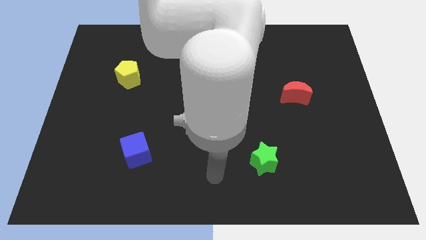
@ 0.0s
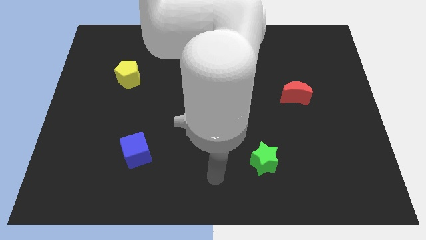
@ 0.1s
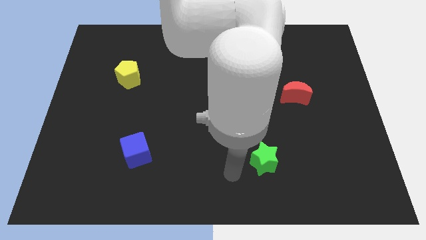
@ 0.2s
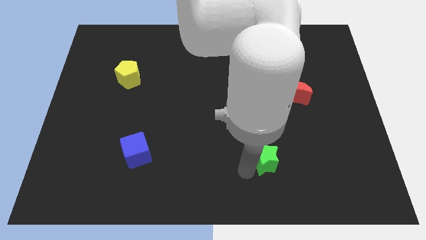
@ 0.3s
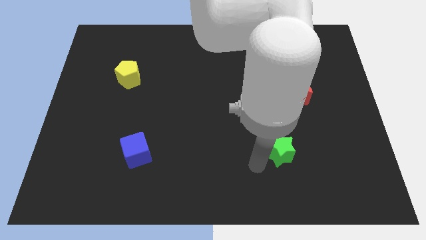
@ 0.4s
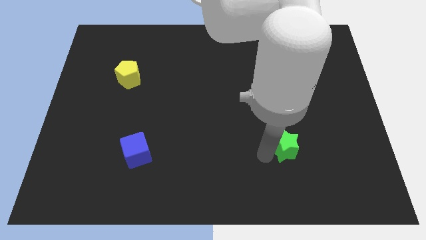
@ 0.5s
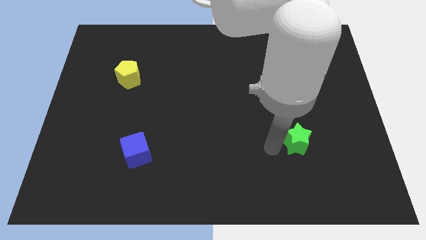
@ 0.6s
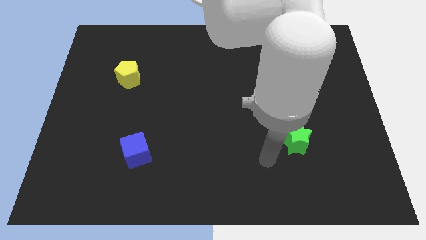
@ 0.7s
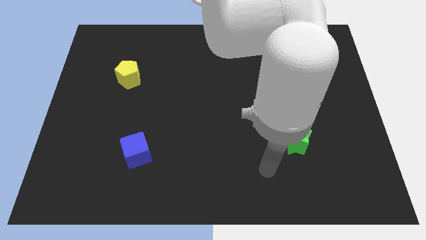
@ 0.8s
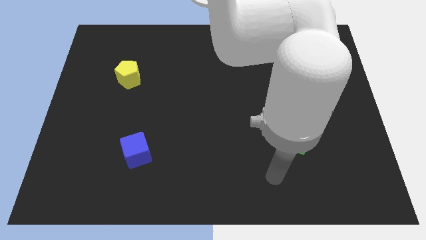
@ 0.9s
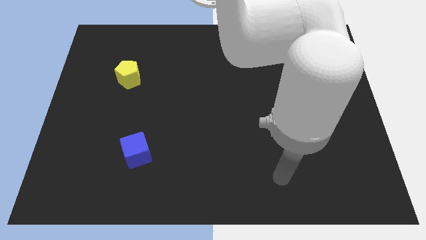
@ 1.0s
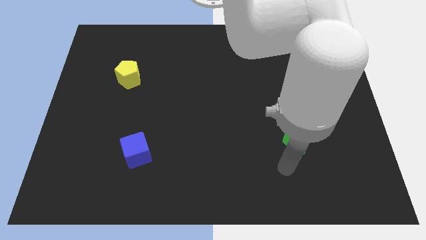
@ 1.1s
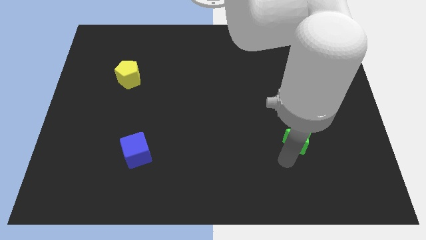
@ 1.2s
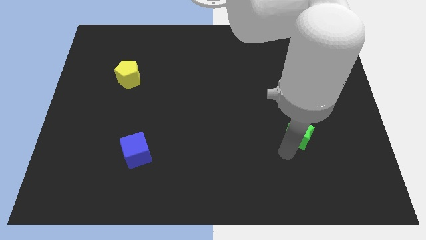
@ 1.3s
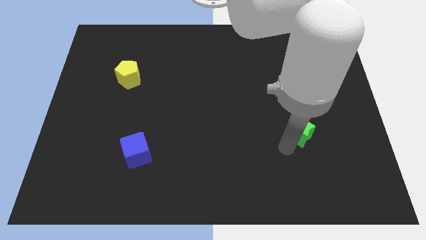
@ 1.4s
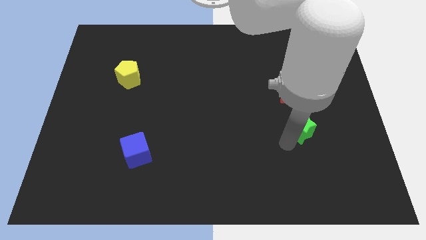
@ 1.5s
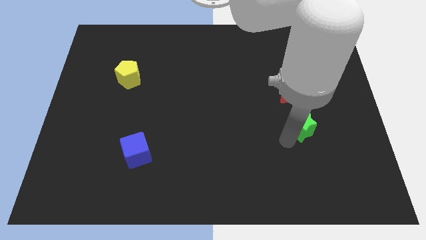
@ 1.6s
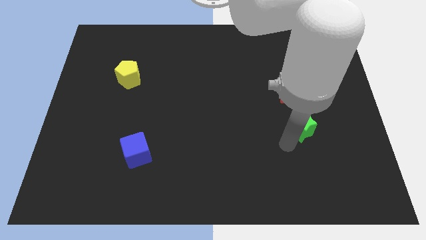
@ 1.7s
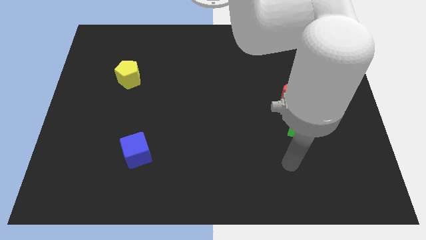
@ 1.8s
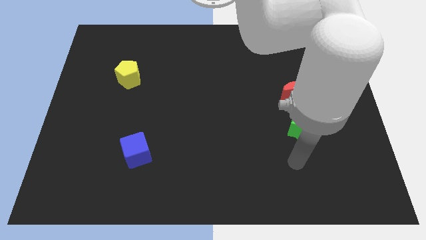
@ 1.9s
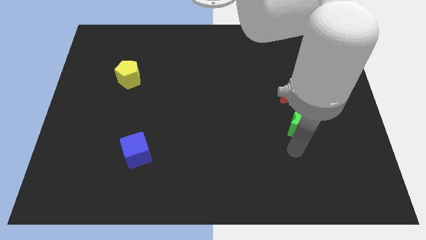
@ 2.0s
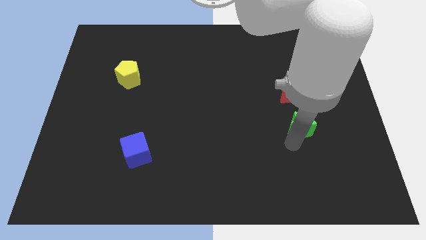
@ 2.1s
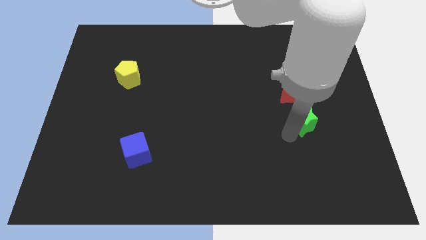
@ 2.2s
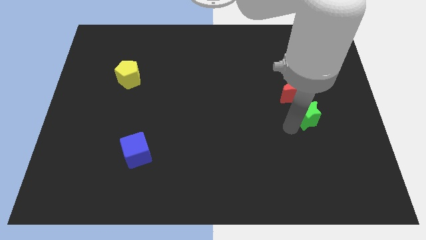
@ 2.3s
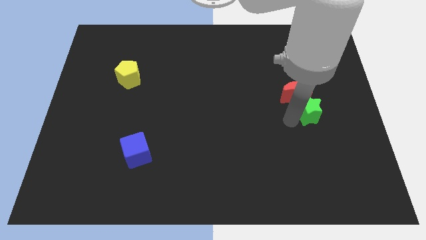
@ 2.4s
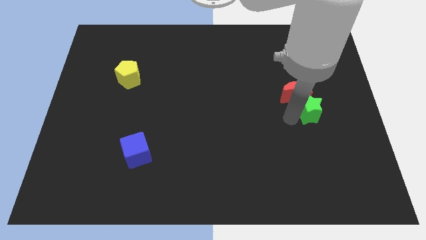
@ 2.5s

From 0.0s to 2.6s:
push the green block to the red moon

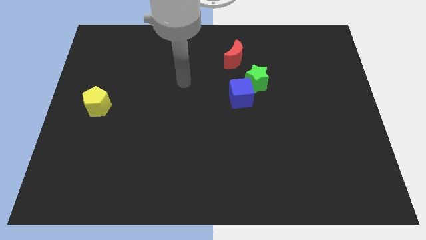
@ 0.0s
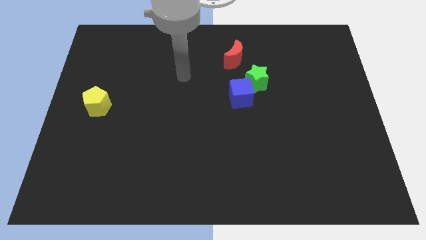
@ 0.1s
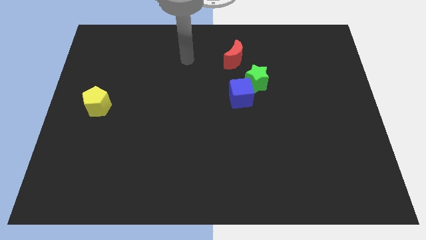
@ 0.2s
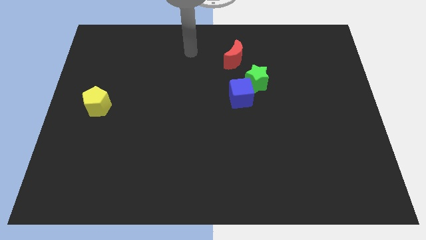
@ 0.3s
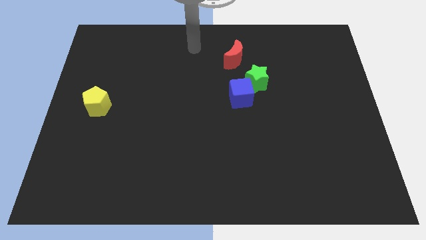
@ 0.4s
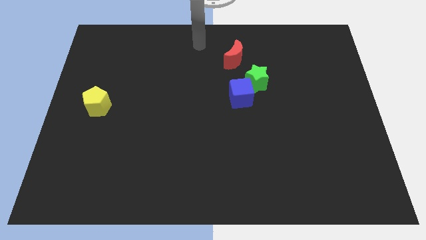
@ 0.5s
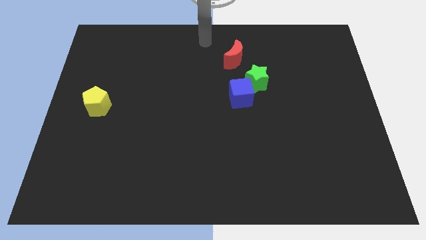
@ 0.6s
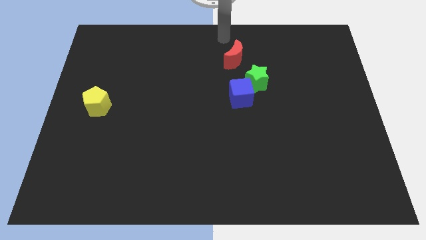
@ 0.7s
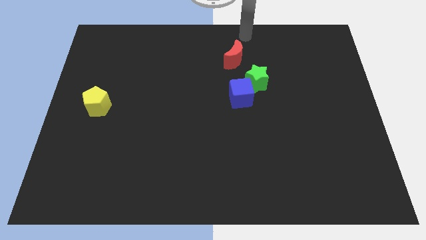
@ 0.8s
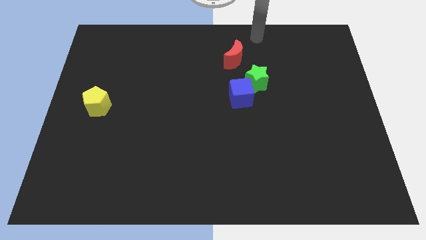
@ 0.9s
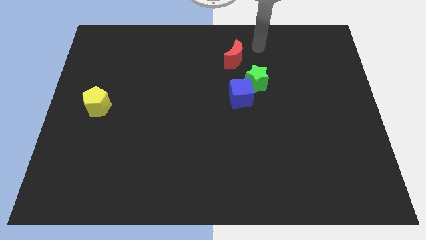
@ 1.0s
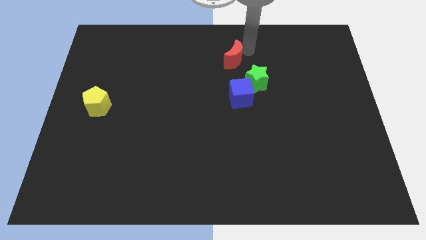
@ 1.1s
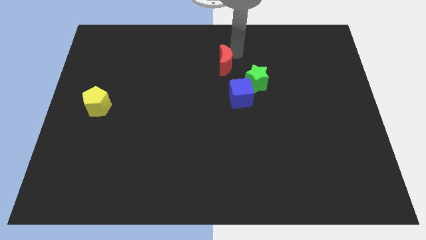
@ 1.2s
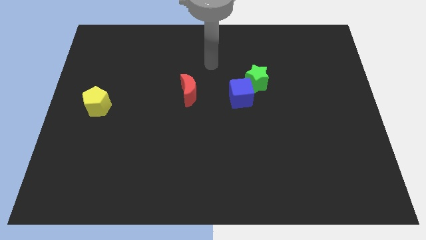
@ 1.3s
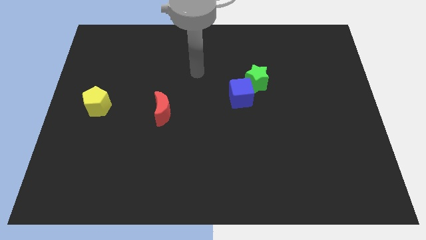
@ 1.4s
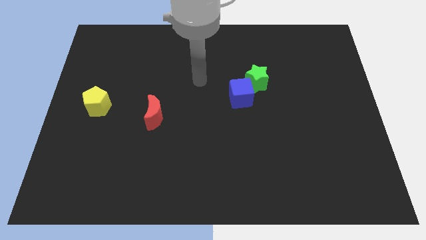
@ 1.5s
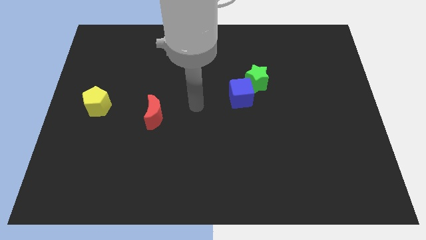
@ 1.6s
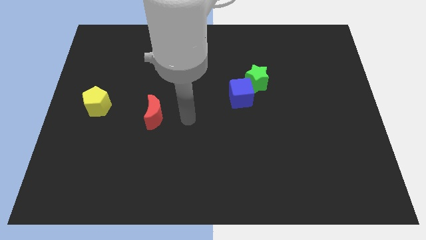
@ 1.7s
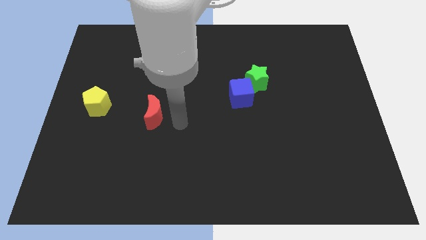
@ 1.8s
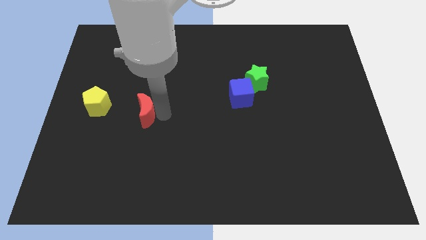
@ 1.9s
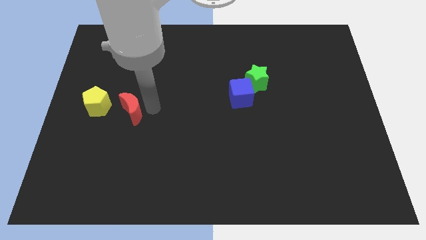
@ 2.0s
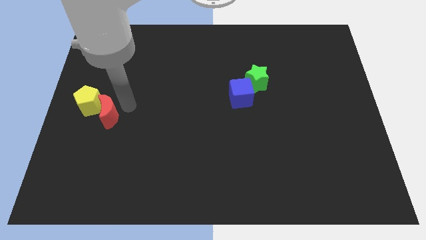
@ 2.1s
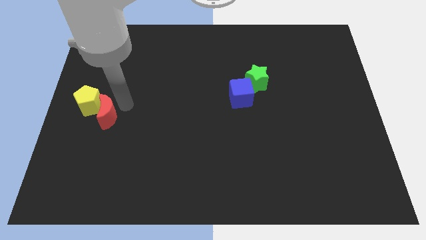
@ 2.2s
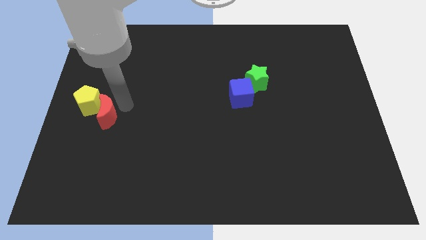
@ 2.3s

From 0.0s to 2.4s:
move the moon next to the pentagon

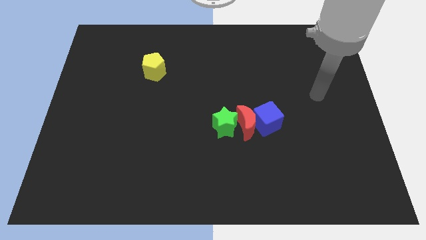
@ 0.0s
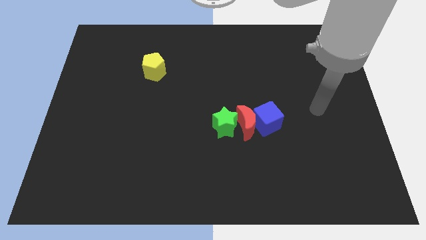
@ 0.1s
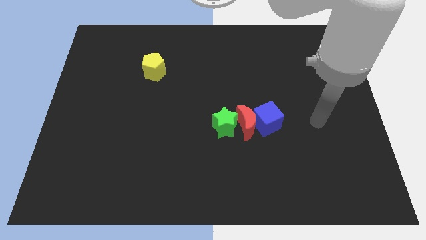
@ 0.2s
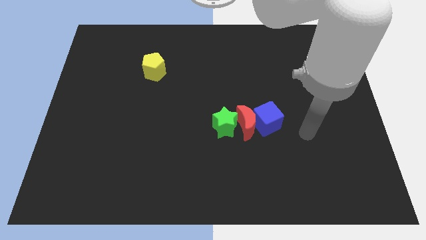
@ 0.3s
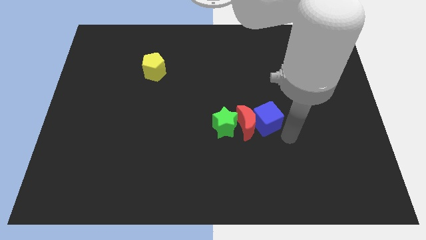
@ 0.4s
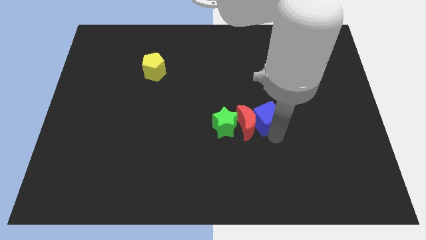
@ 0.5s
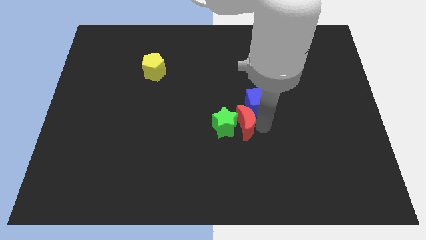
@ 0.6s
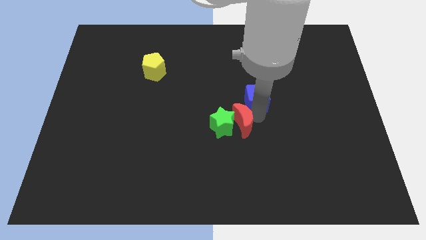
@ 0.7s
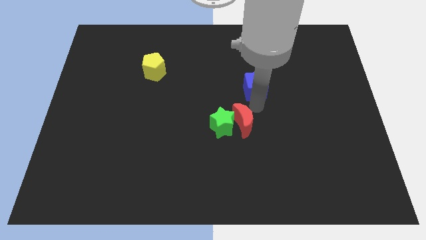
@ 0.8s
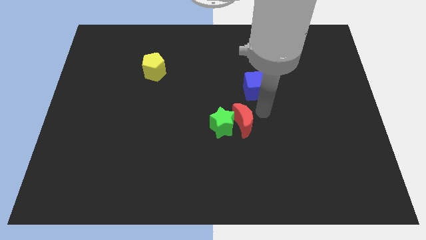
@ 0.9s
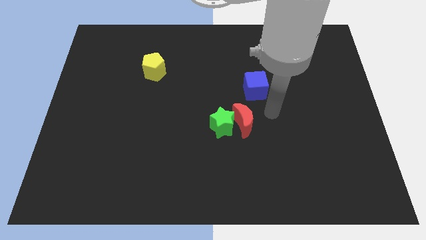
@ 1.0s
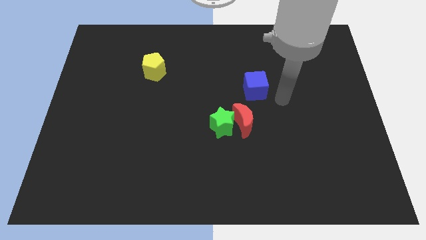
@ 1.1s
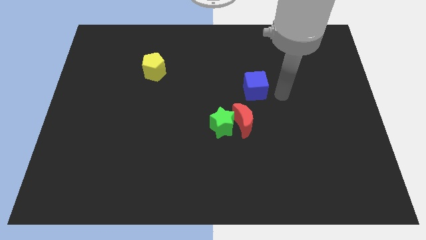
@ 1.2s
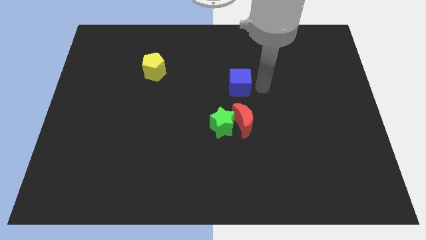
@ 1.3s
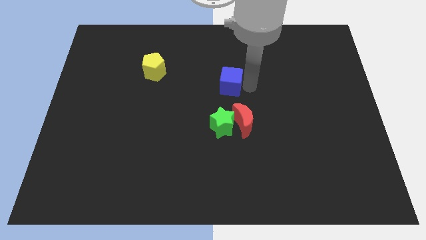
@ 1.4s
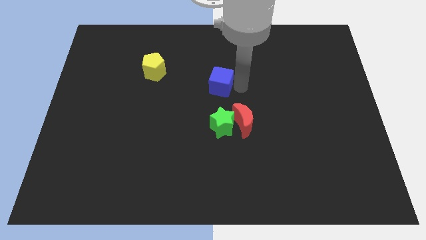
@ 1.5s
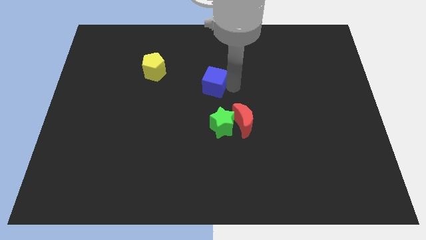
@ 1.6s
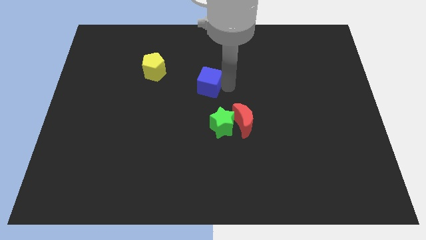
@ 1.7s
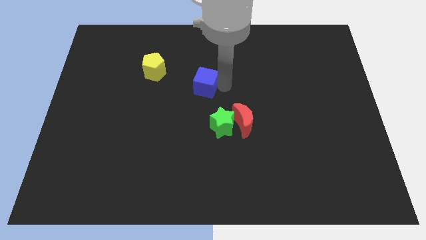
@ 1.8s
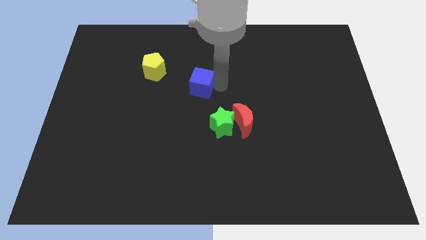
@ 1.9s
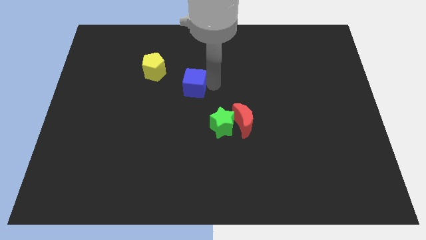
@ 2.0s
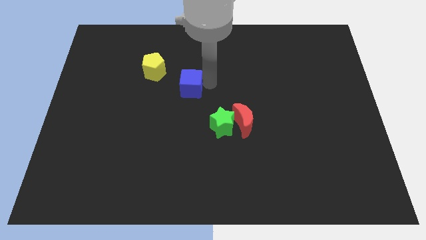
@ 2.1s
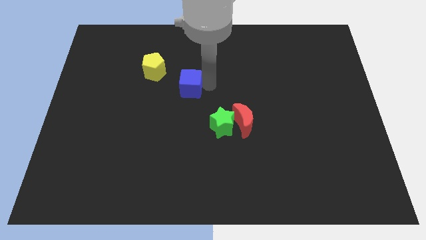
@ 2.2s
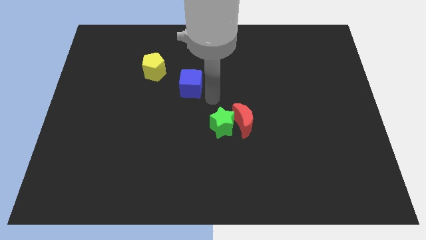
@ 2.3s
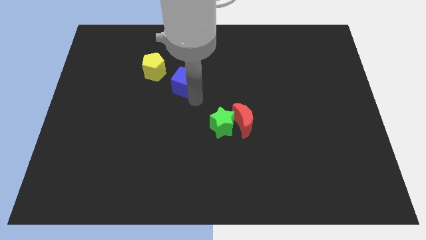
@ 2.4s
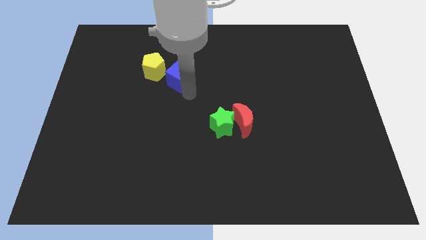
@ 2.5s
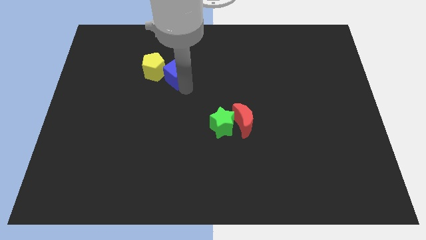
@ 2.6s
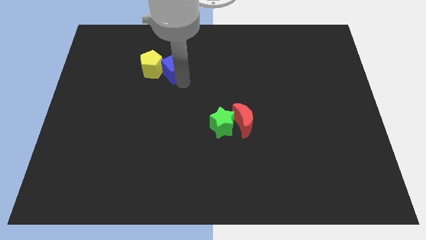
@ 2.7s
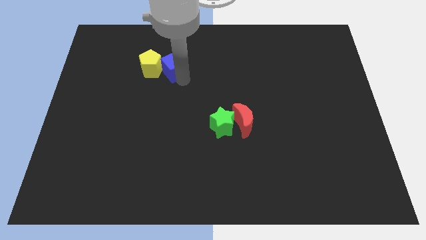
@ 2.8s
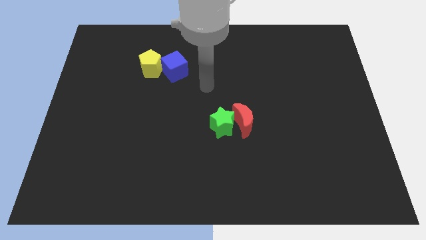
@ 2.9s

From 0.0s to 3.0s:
move the blue block to the pentagon

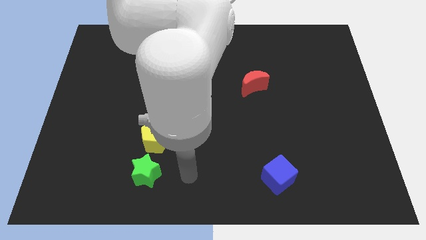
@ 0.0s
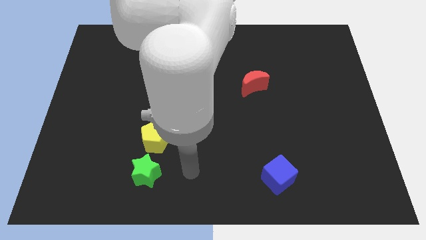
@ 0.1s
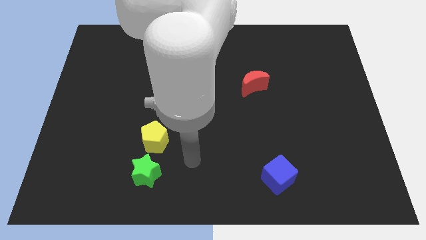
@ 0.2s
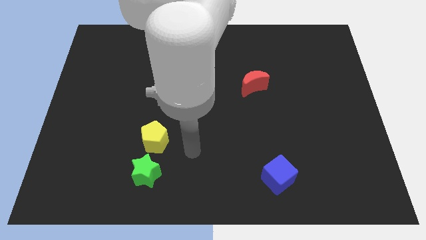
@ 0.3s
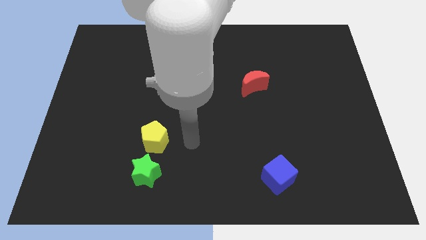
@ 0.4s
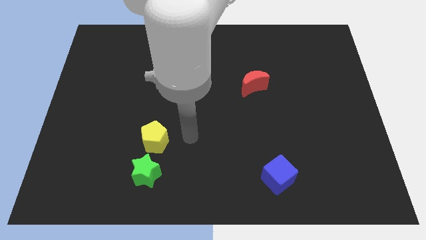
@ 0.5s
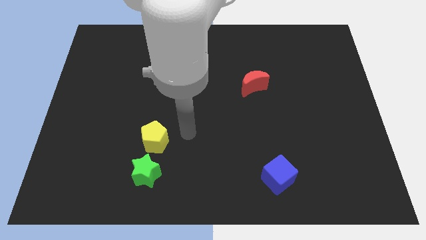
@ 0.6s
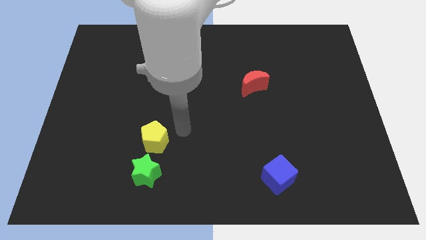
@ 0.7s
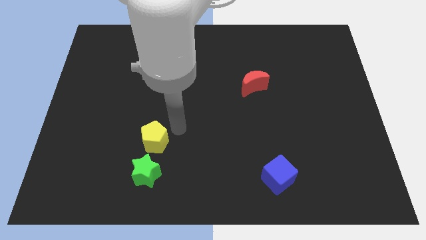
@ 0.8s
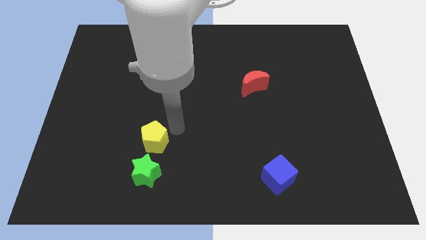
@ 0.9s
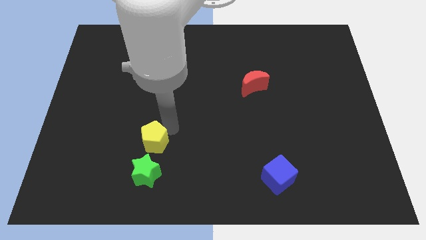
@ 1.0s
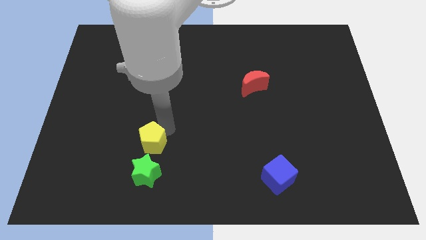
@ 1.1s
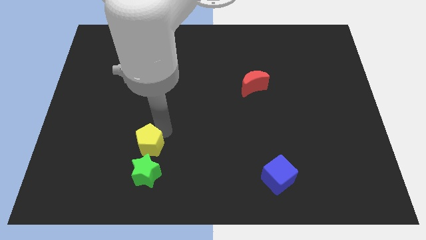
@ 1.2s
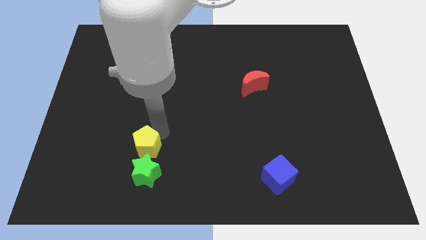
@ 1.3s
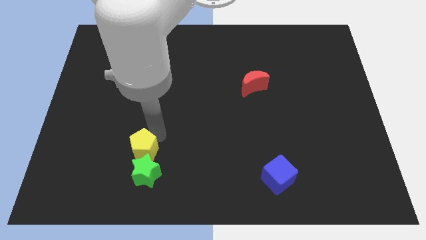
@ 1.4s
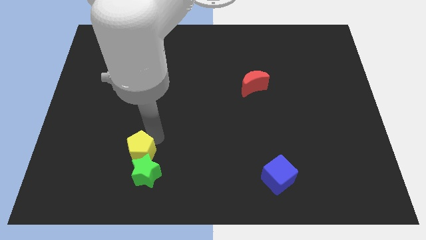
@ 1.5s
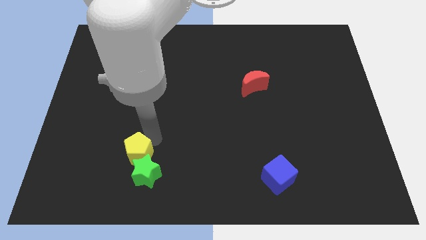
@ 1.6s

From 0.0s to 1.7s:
put the yellow pentagon next to the star
